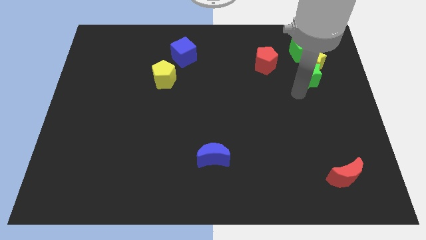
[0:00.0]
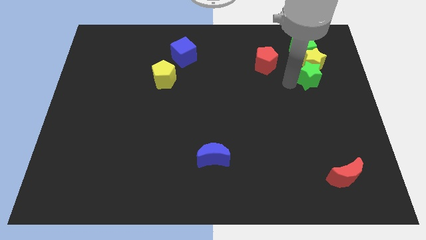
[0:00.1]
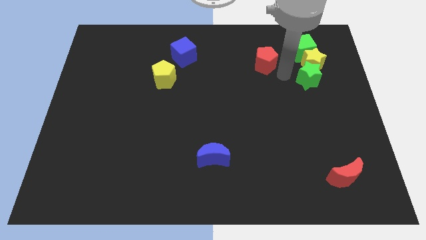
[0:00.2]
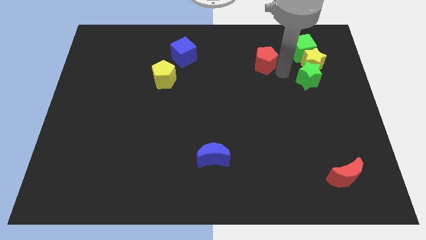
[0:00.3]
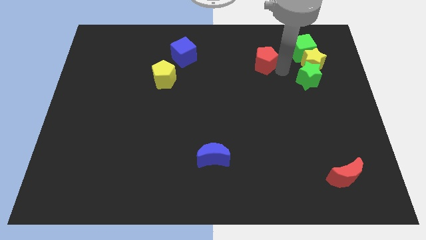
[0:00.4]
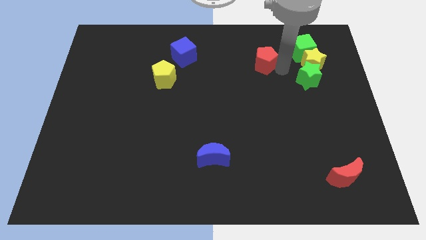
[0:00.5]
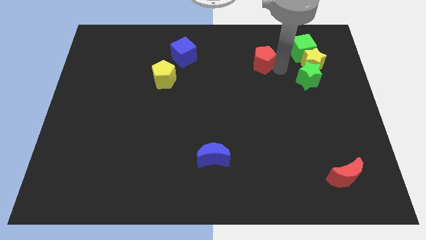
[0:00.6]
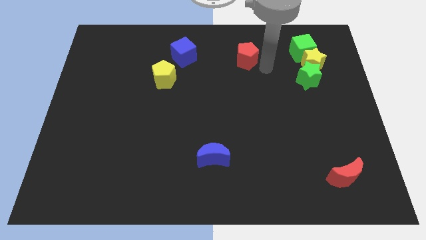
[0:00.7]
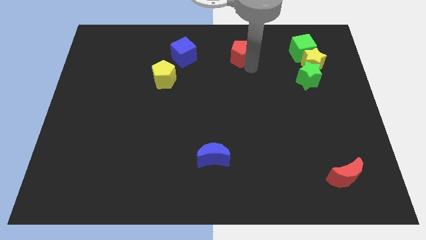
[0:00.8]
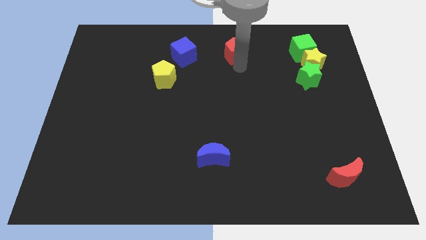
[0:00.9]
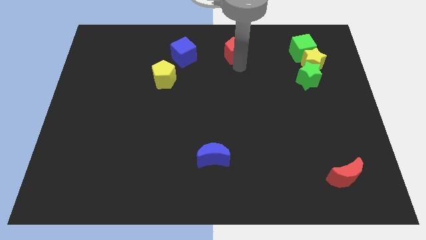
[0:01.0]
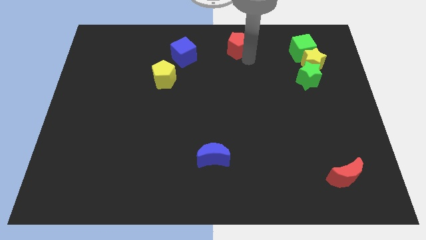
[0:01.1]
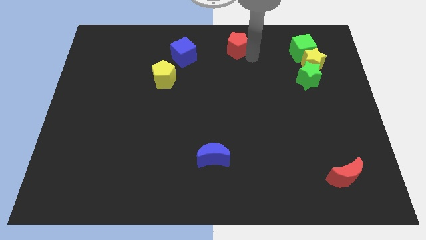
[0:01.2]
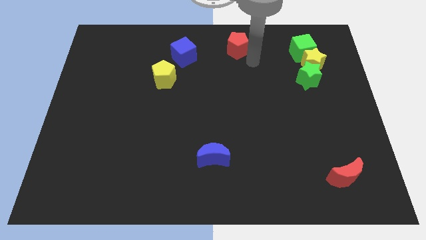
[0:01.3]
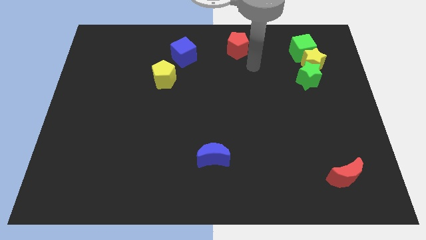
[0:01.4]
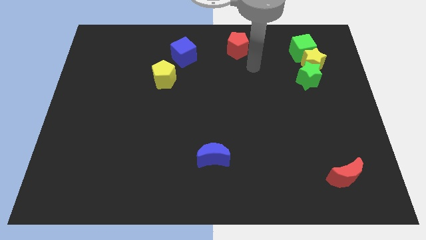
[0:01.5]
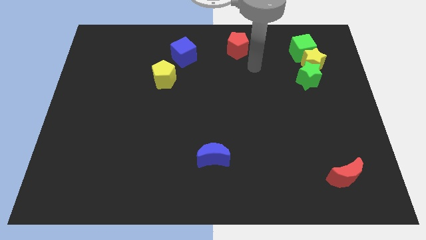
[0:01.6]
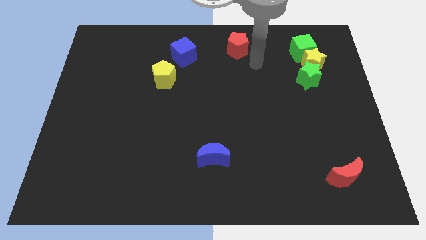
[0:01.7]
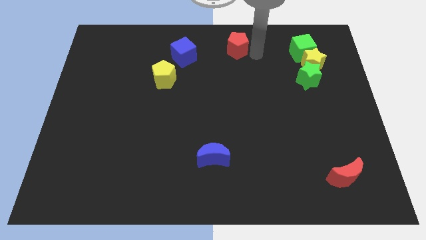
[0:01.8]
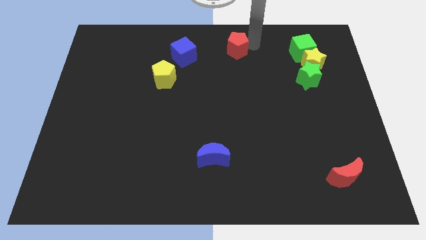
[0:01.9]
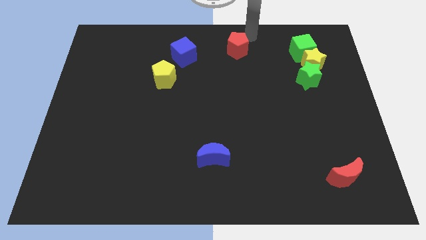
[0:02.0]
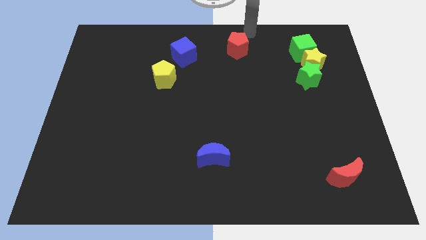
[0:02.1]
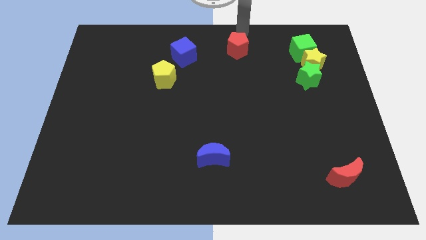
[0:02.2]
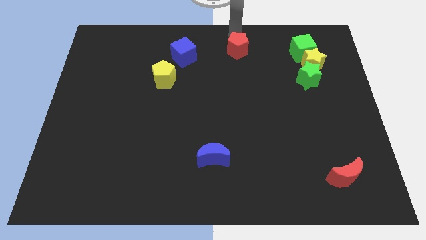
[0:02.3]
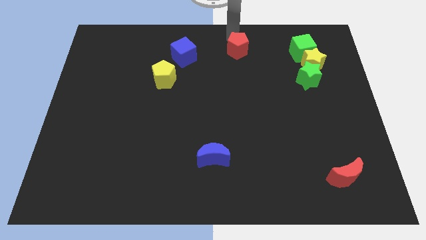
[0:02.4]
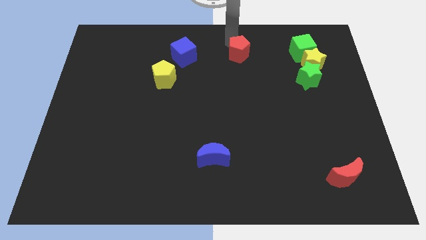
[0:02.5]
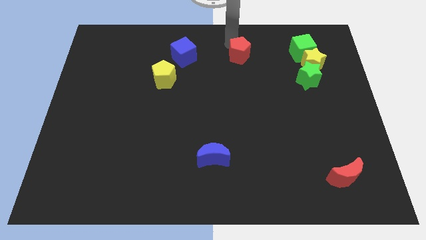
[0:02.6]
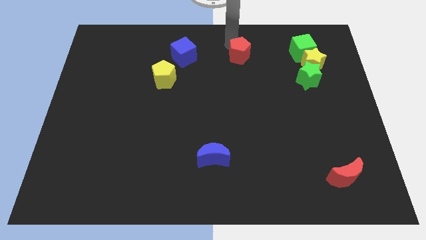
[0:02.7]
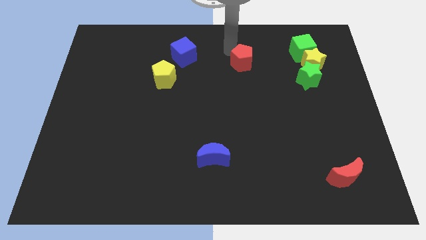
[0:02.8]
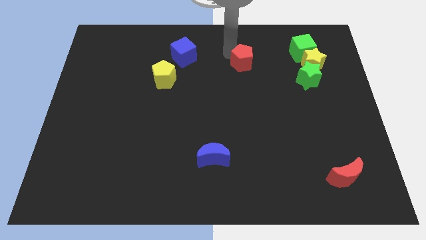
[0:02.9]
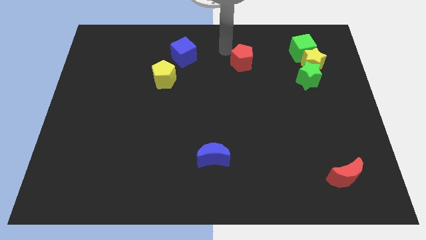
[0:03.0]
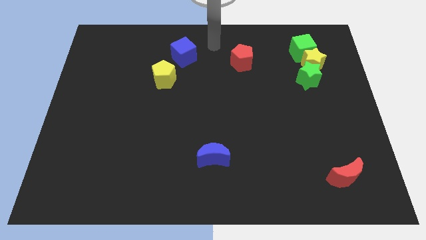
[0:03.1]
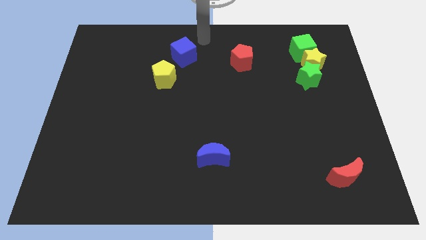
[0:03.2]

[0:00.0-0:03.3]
place the red pentagon to the right of the blue cube

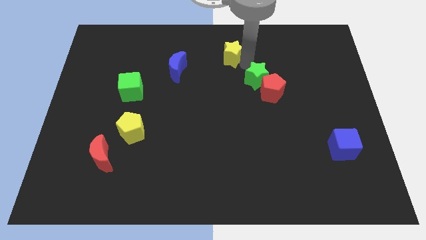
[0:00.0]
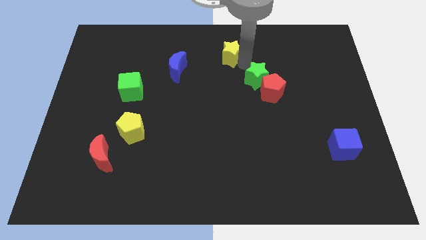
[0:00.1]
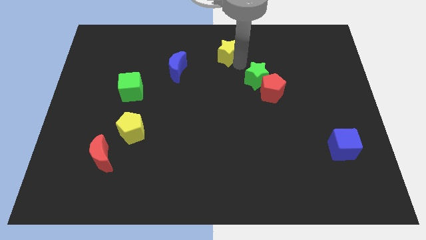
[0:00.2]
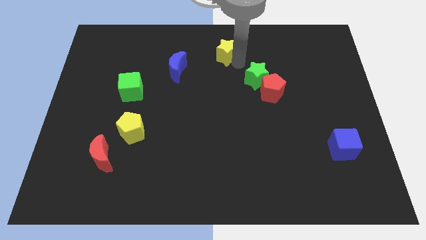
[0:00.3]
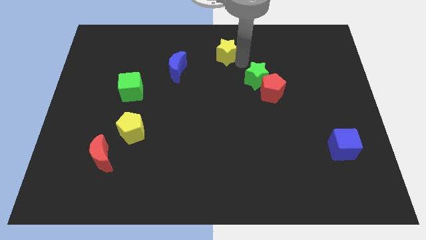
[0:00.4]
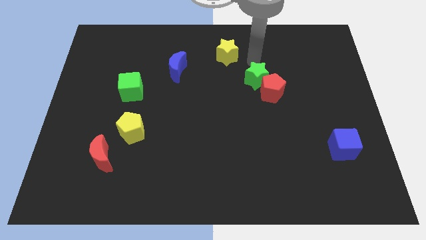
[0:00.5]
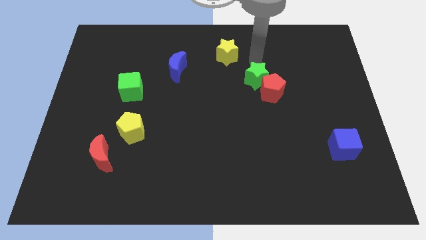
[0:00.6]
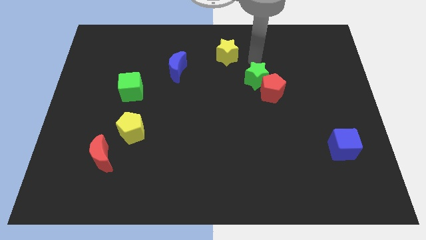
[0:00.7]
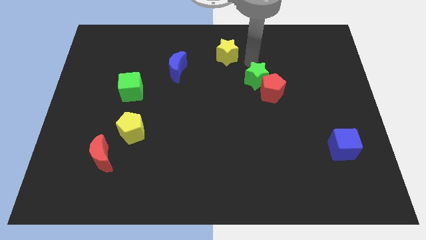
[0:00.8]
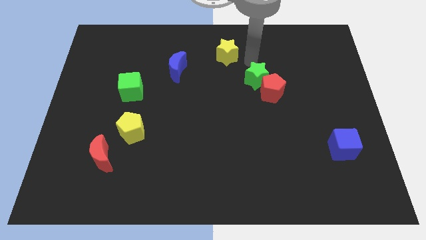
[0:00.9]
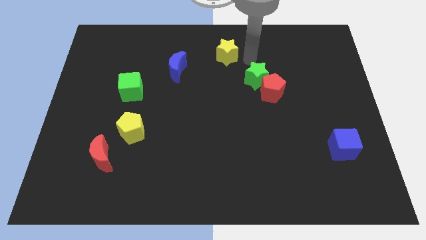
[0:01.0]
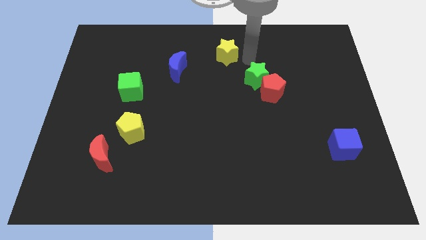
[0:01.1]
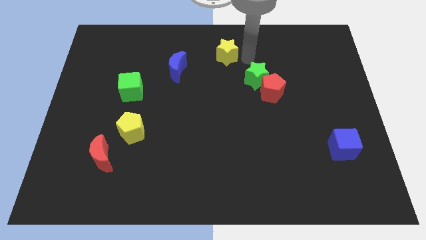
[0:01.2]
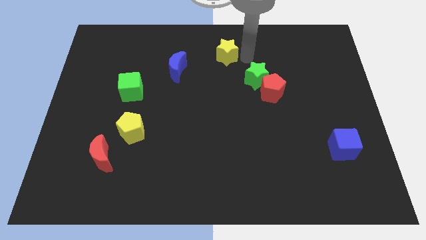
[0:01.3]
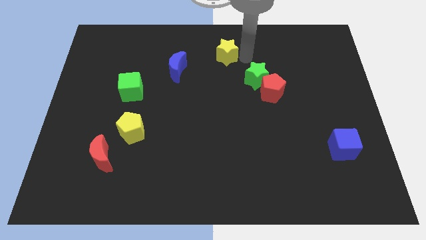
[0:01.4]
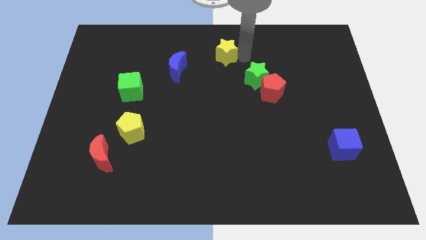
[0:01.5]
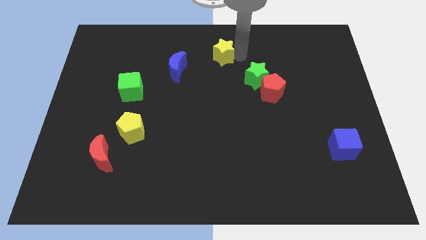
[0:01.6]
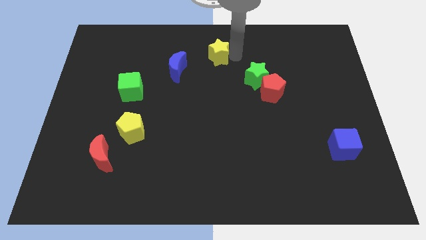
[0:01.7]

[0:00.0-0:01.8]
place the yellow star at the top center of the board

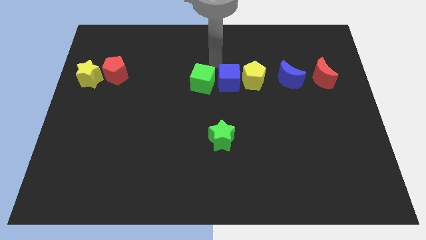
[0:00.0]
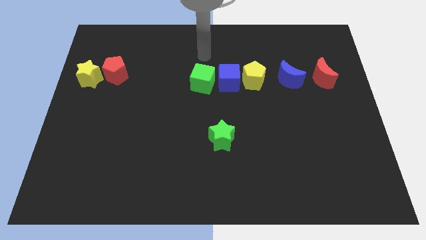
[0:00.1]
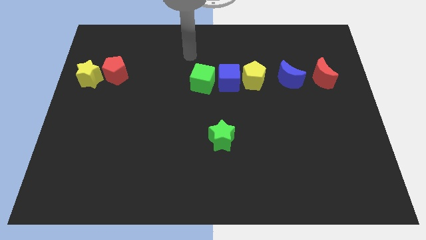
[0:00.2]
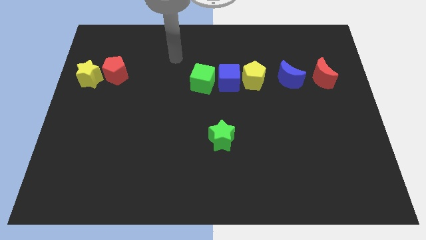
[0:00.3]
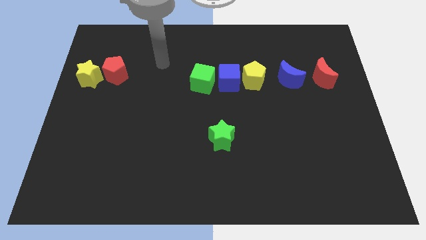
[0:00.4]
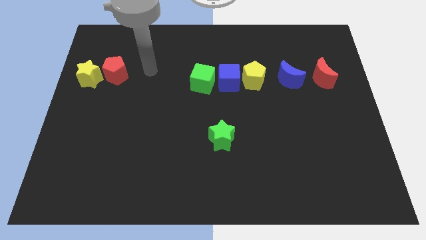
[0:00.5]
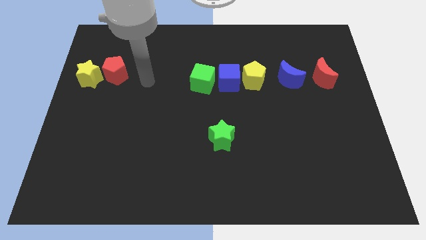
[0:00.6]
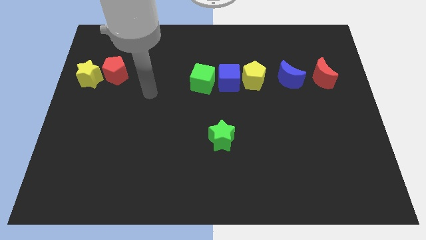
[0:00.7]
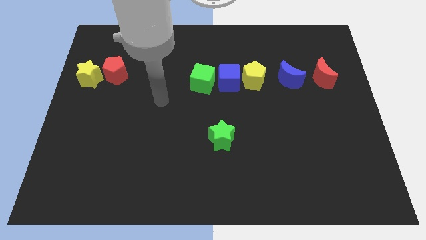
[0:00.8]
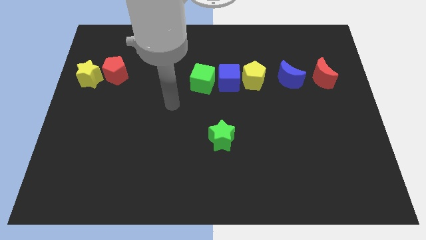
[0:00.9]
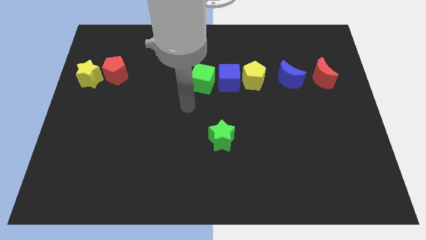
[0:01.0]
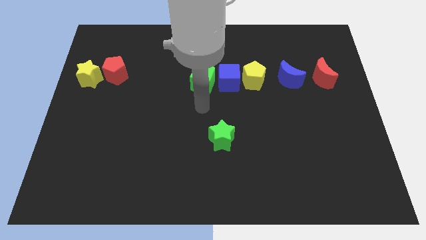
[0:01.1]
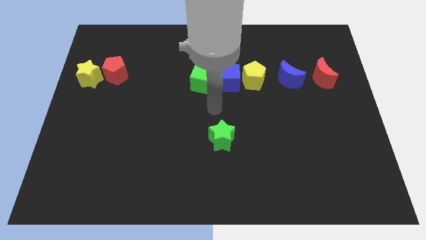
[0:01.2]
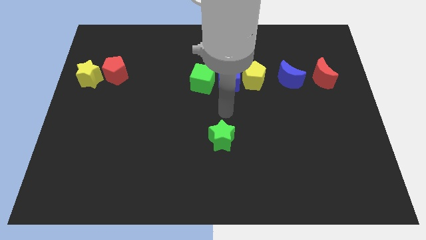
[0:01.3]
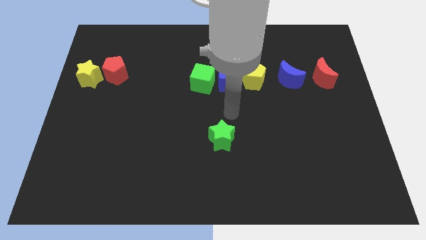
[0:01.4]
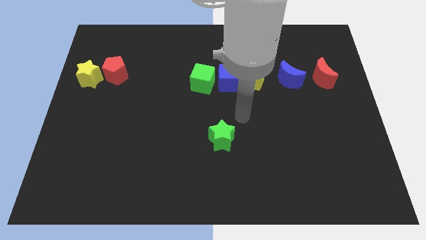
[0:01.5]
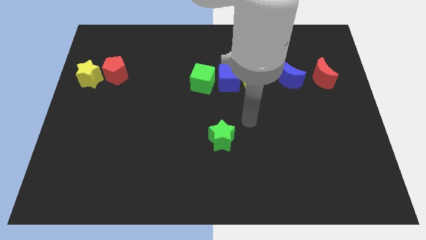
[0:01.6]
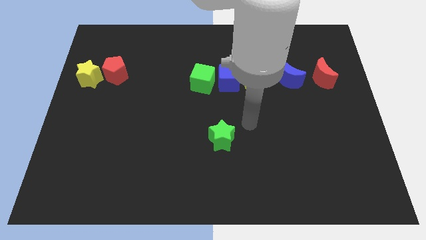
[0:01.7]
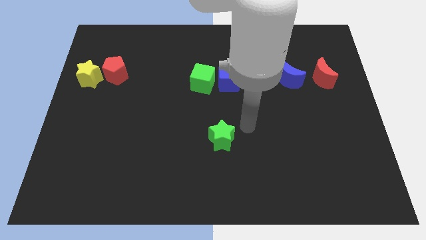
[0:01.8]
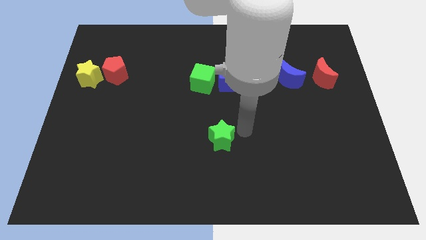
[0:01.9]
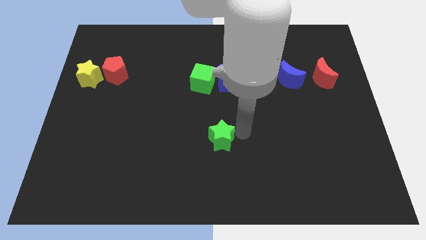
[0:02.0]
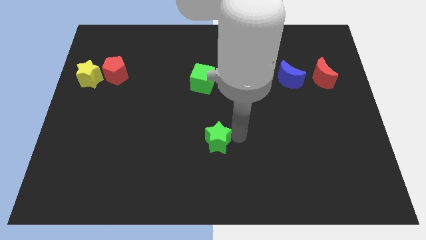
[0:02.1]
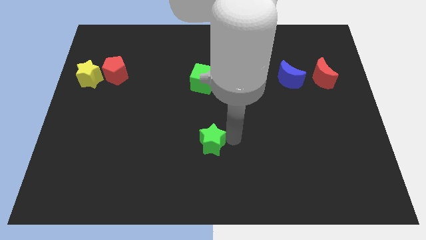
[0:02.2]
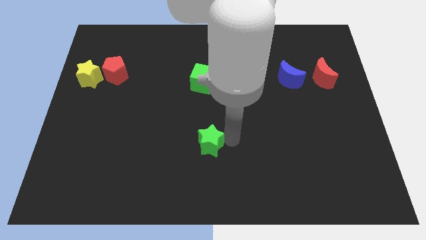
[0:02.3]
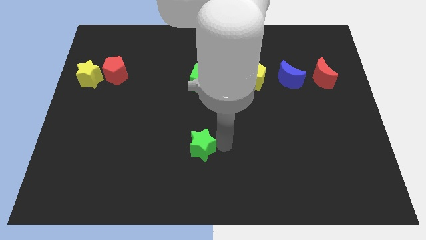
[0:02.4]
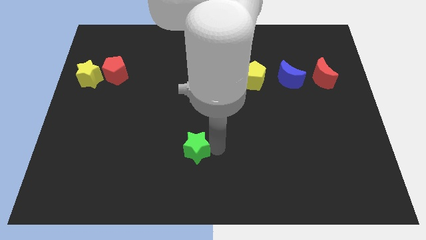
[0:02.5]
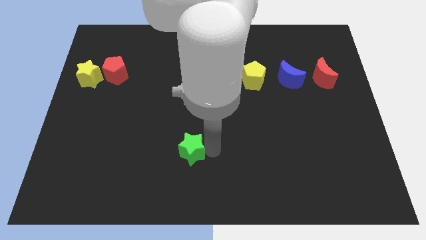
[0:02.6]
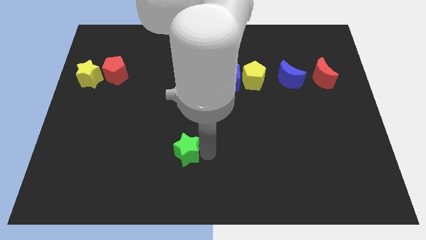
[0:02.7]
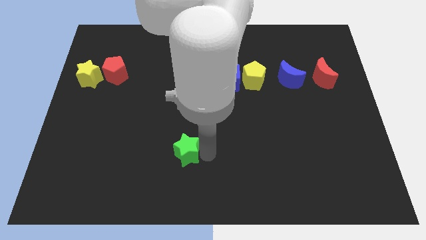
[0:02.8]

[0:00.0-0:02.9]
push the green star towards the left side of the board

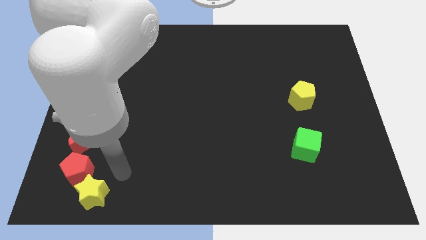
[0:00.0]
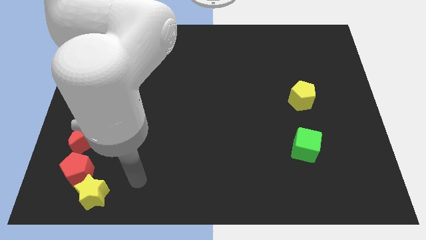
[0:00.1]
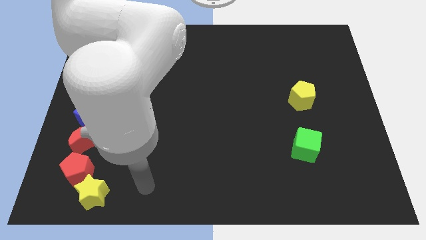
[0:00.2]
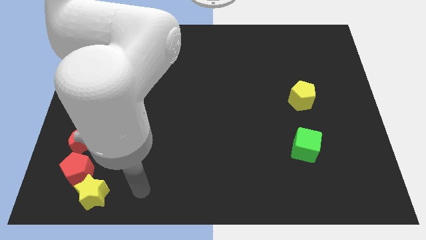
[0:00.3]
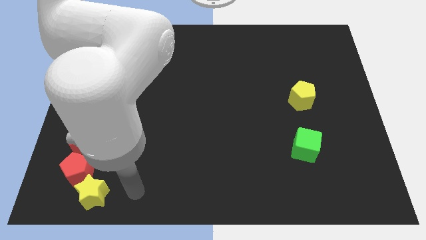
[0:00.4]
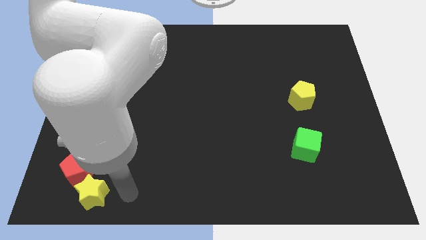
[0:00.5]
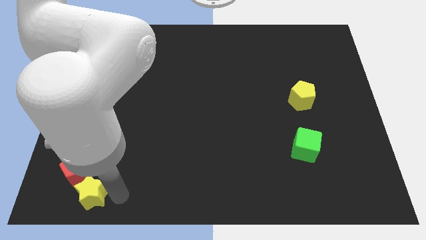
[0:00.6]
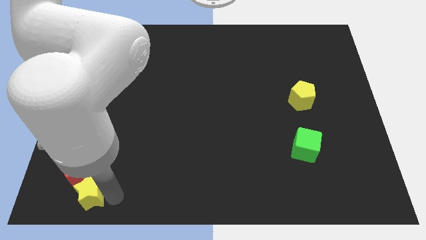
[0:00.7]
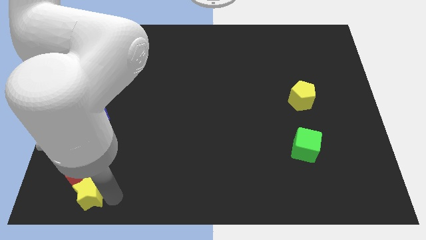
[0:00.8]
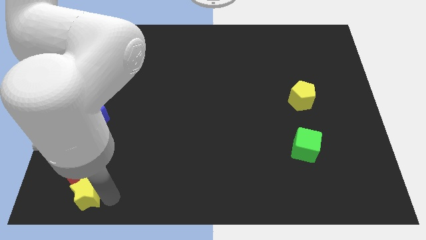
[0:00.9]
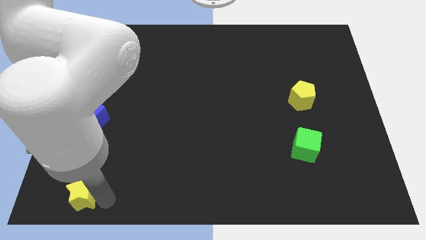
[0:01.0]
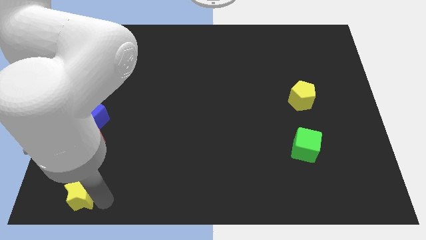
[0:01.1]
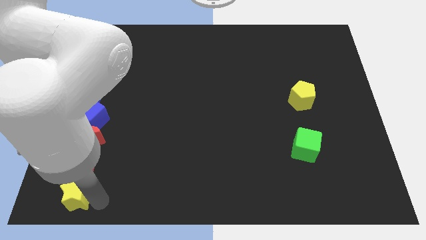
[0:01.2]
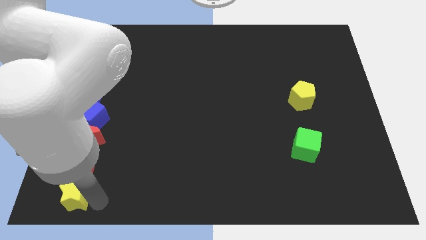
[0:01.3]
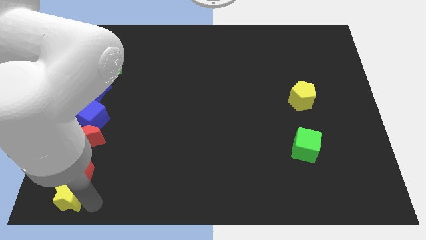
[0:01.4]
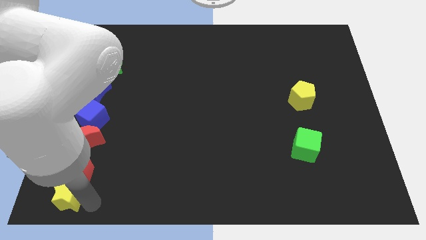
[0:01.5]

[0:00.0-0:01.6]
move the yellow star into the bottom side of the red pentagon
